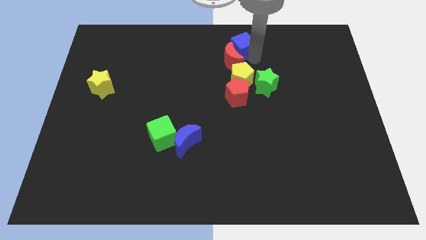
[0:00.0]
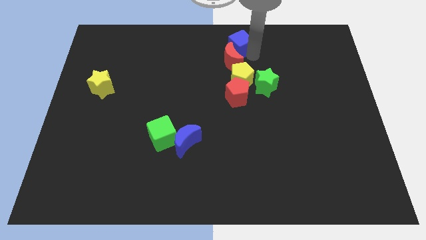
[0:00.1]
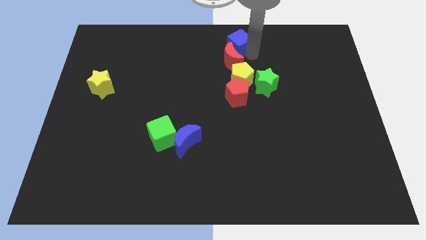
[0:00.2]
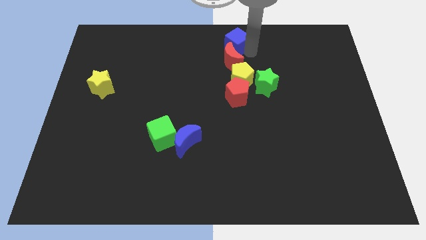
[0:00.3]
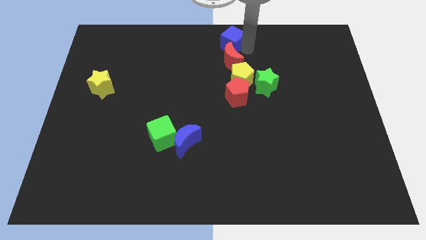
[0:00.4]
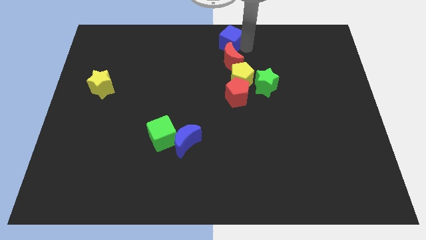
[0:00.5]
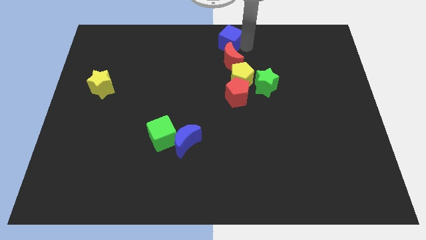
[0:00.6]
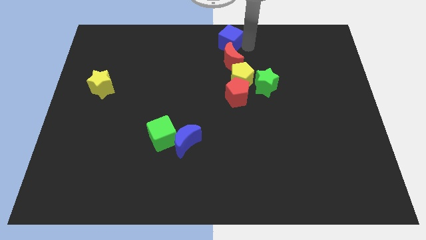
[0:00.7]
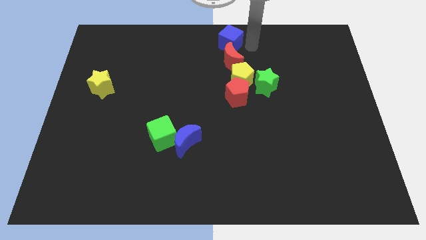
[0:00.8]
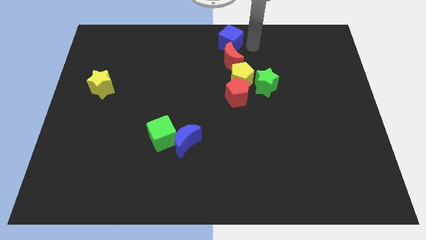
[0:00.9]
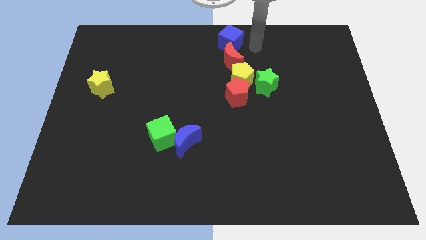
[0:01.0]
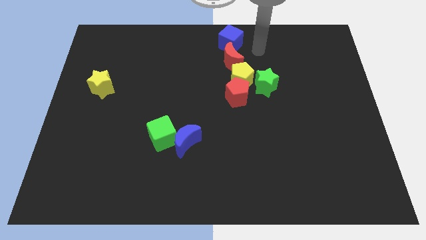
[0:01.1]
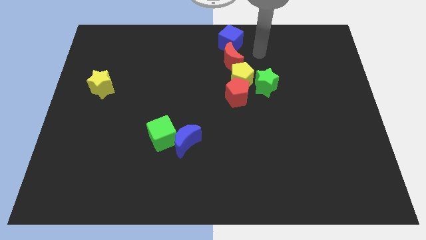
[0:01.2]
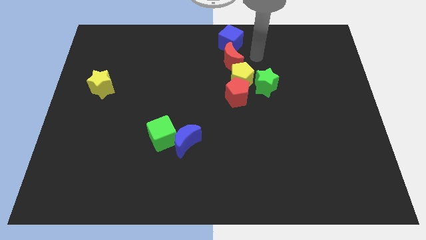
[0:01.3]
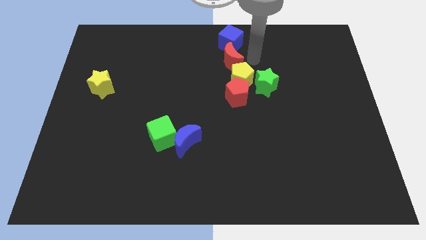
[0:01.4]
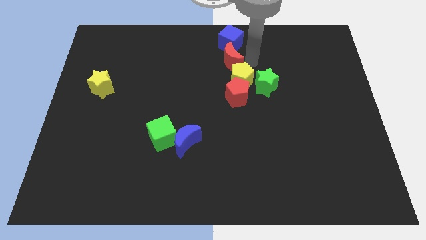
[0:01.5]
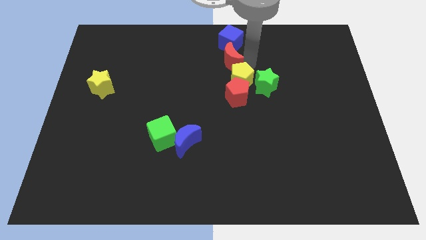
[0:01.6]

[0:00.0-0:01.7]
put the blue cube to the top side of the red moon

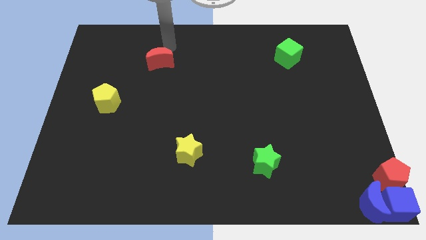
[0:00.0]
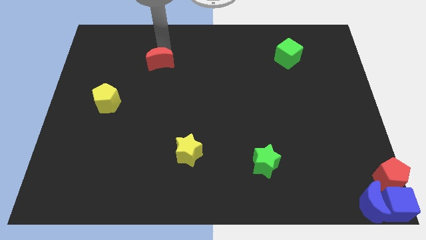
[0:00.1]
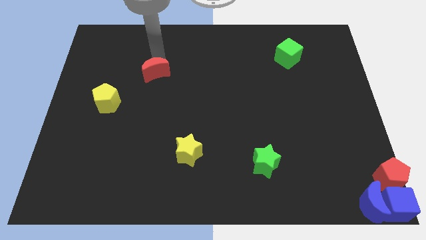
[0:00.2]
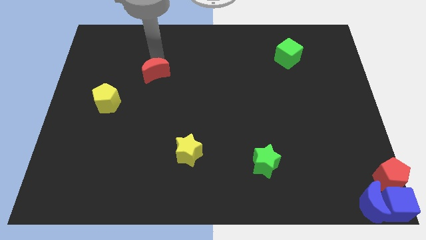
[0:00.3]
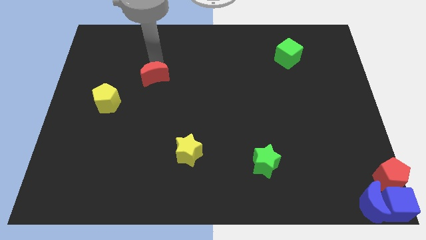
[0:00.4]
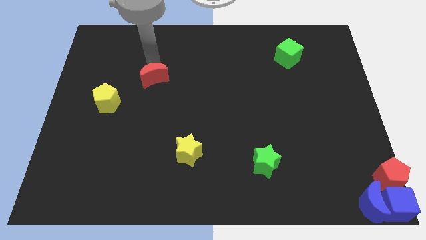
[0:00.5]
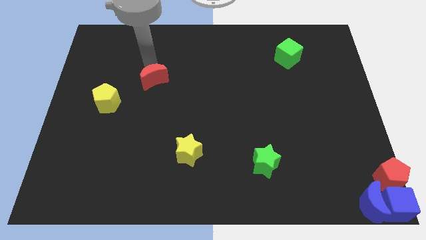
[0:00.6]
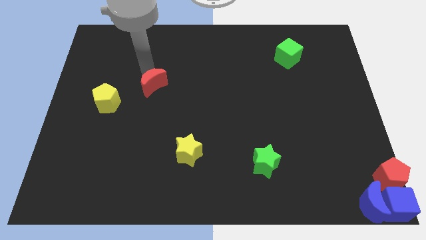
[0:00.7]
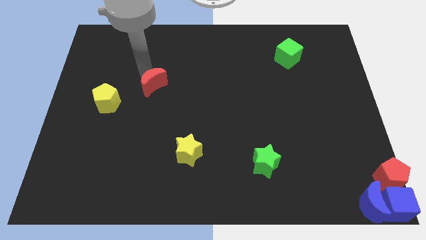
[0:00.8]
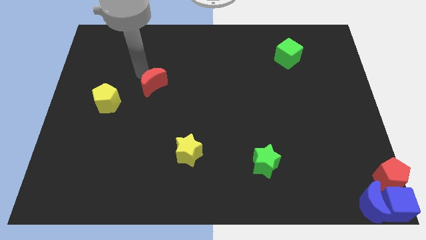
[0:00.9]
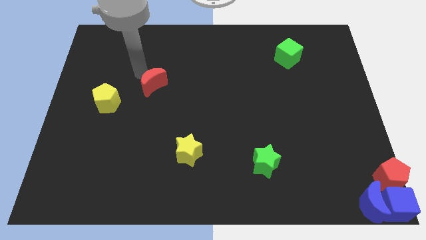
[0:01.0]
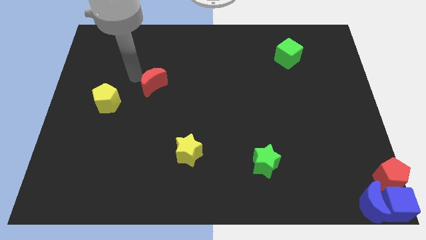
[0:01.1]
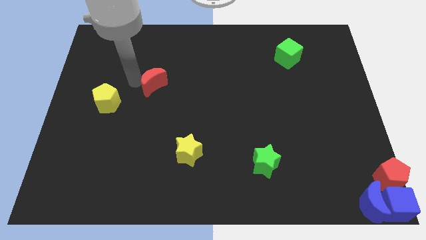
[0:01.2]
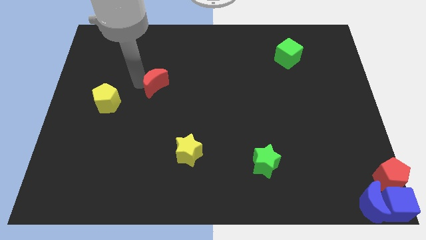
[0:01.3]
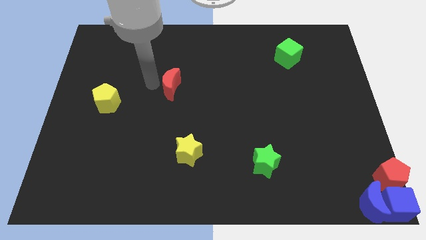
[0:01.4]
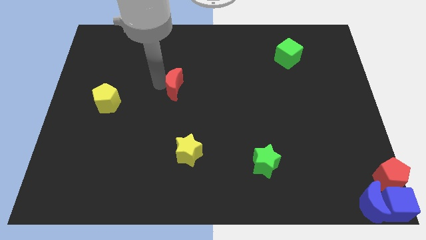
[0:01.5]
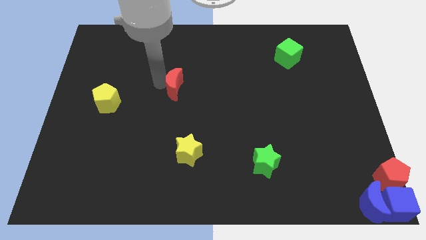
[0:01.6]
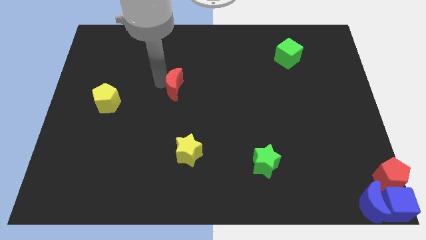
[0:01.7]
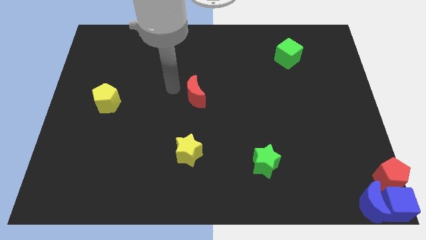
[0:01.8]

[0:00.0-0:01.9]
place the red crescent at center of the board

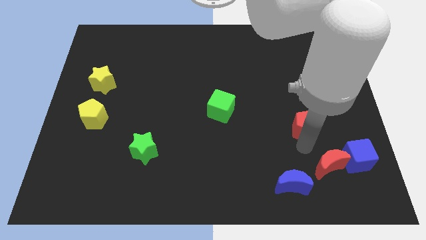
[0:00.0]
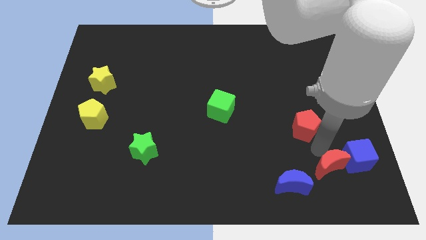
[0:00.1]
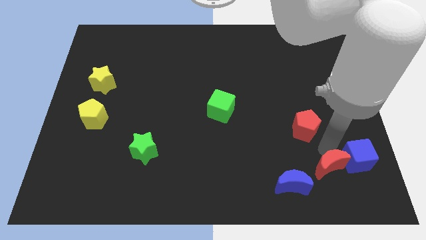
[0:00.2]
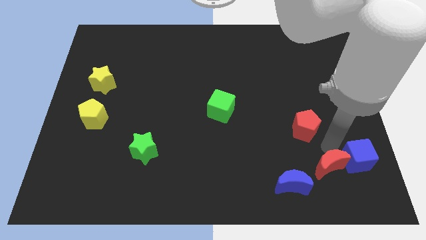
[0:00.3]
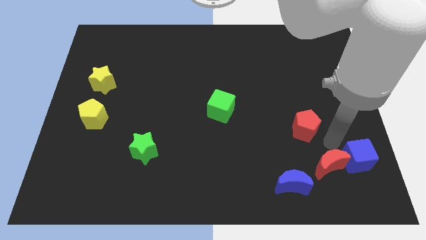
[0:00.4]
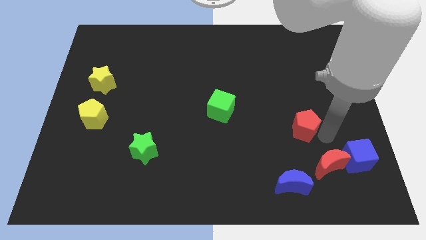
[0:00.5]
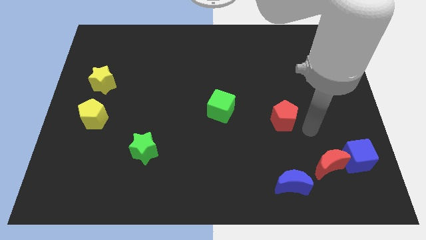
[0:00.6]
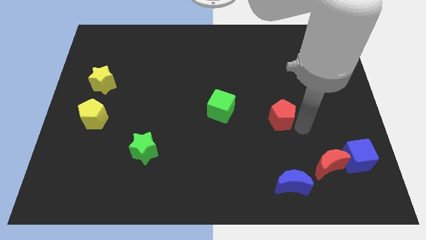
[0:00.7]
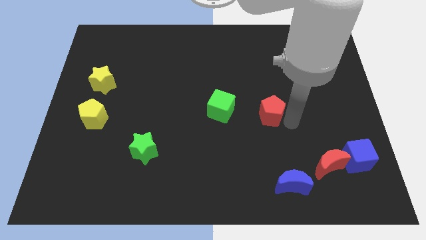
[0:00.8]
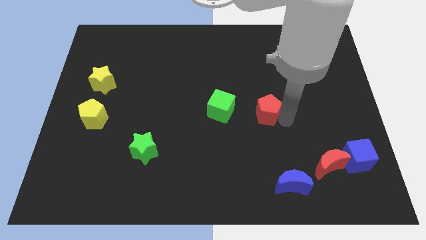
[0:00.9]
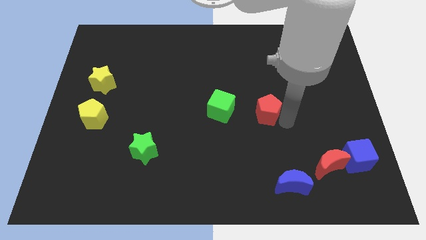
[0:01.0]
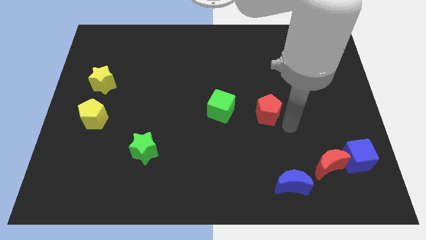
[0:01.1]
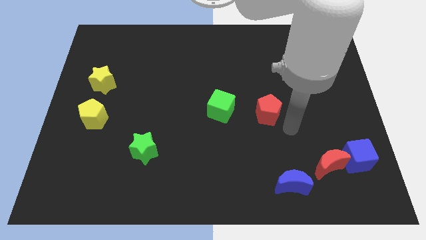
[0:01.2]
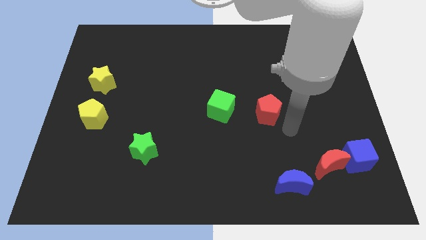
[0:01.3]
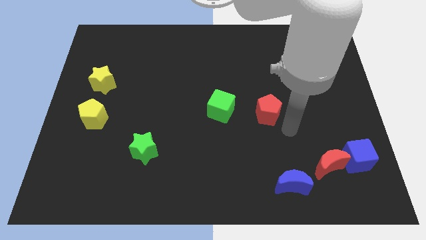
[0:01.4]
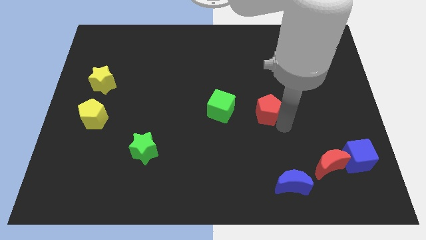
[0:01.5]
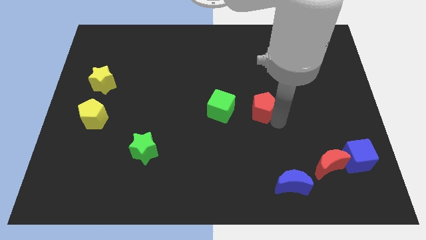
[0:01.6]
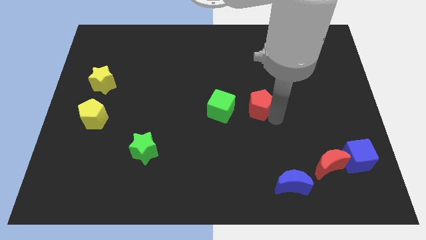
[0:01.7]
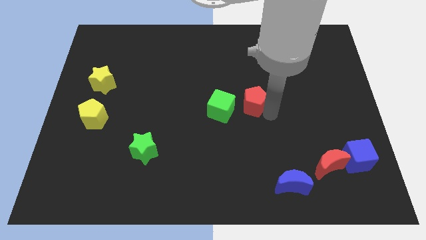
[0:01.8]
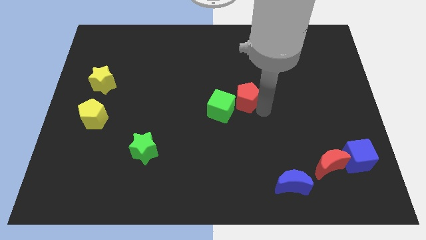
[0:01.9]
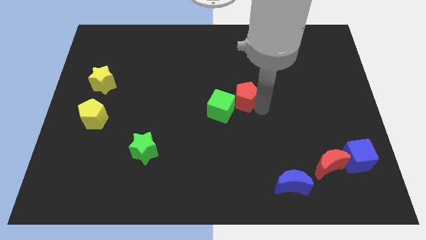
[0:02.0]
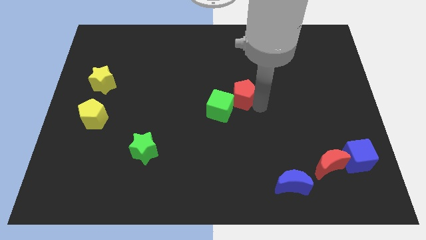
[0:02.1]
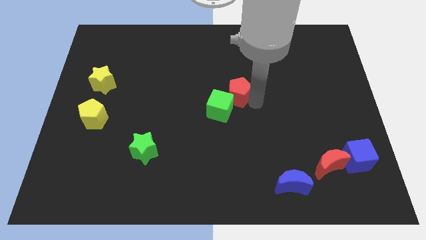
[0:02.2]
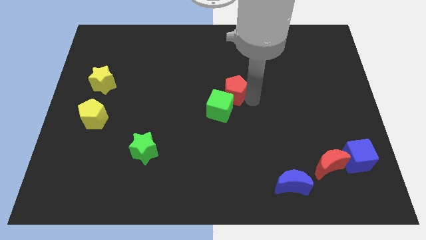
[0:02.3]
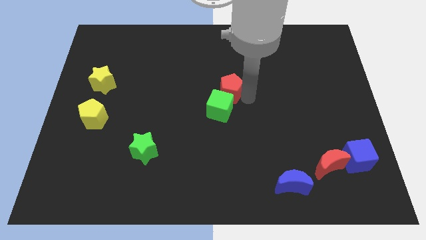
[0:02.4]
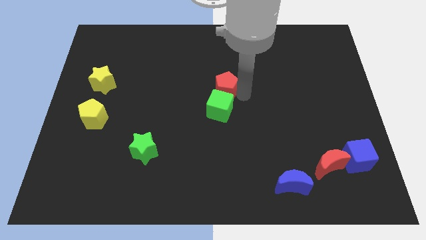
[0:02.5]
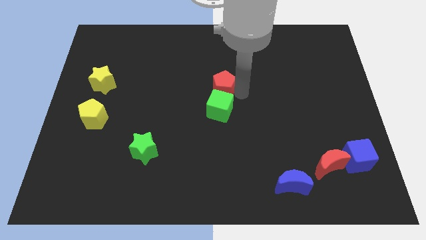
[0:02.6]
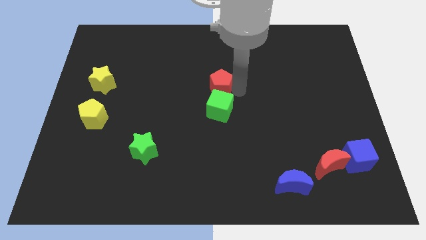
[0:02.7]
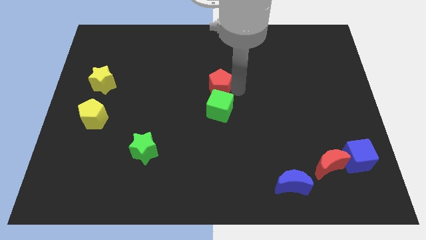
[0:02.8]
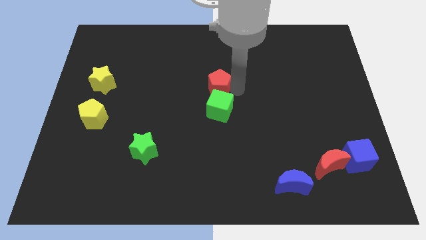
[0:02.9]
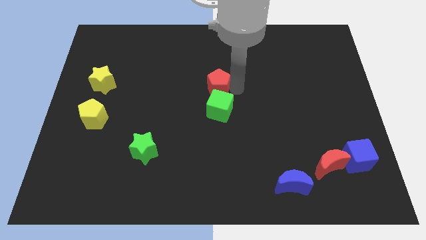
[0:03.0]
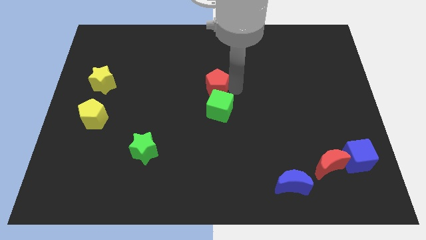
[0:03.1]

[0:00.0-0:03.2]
move the red pentagon to the top of the green cube

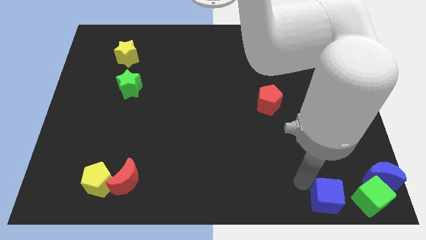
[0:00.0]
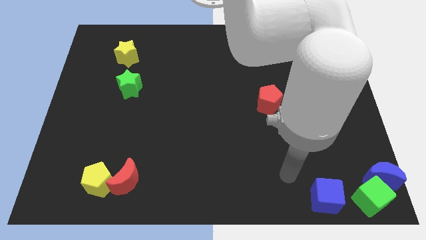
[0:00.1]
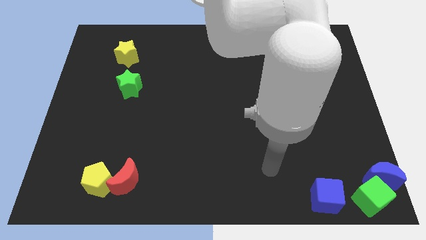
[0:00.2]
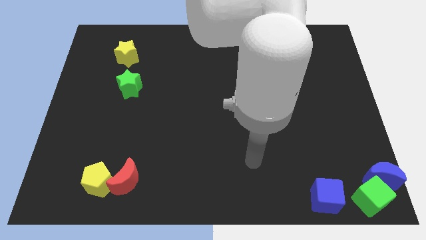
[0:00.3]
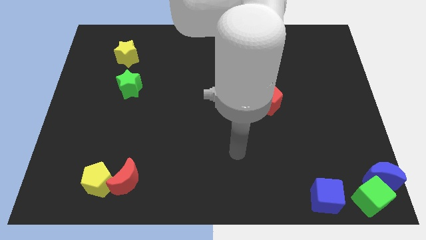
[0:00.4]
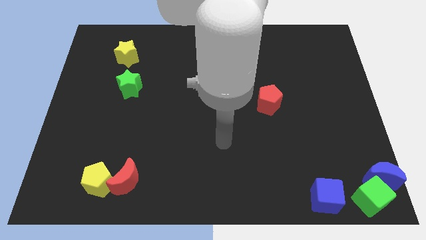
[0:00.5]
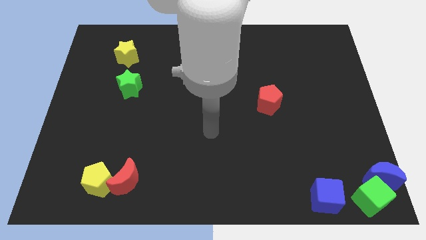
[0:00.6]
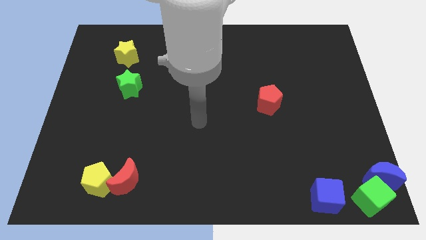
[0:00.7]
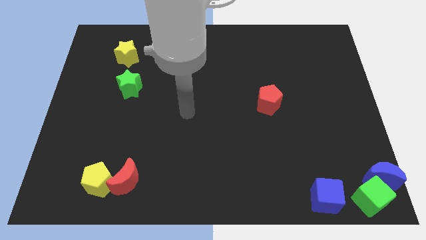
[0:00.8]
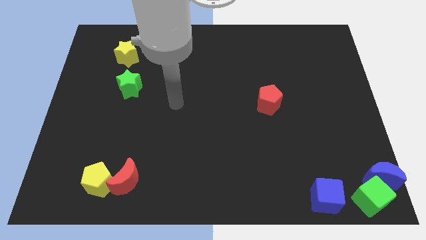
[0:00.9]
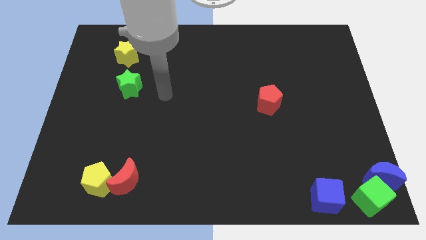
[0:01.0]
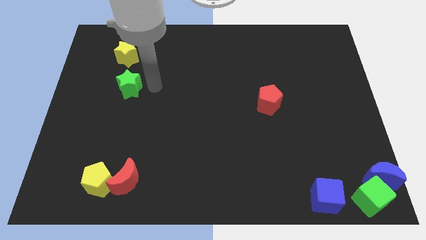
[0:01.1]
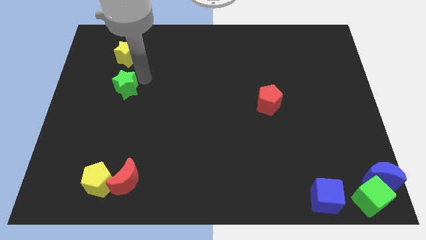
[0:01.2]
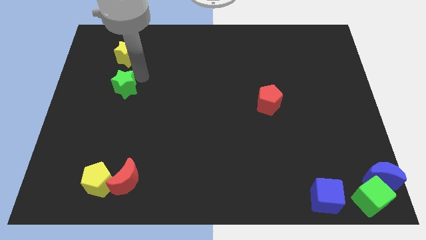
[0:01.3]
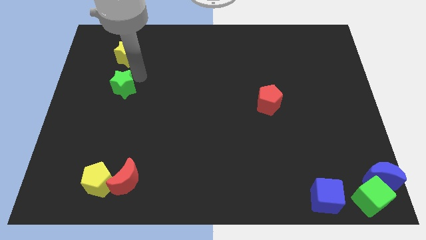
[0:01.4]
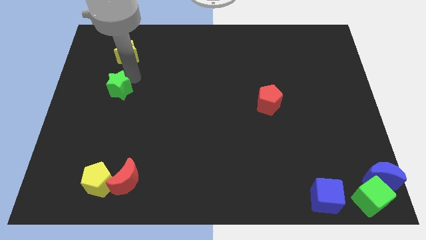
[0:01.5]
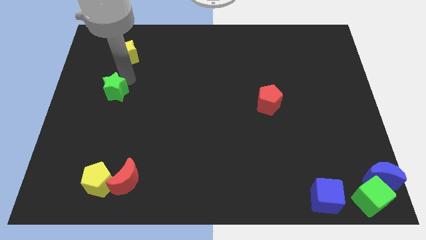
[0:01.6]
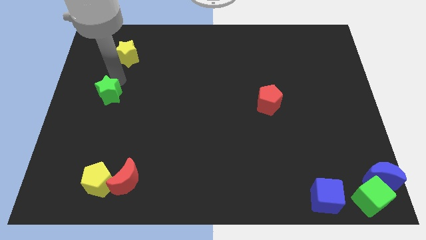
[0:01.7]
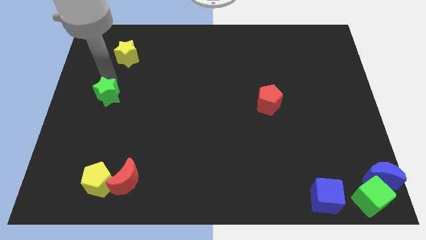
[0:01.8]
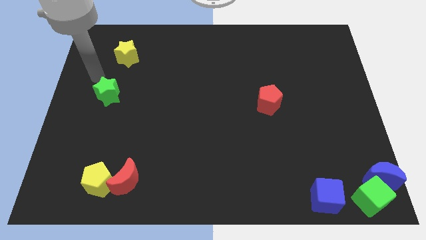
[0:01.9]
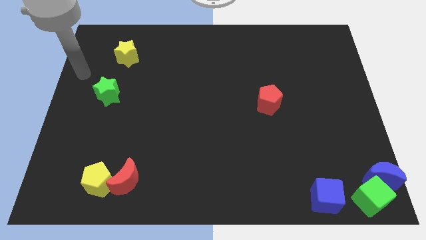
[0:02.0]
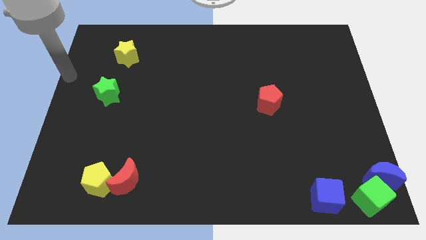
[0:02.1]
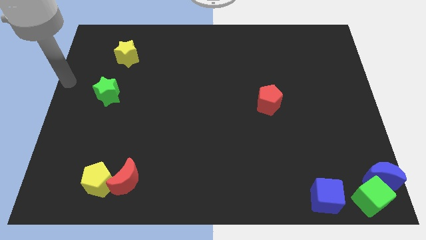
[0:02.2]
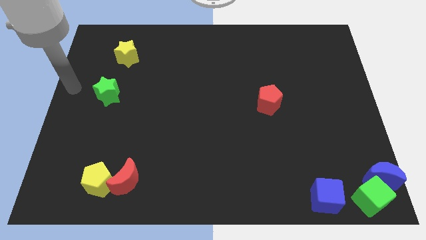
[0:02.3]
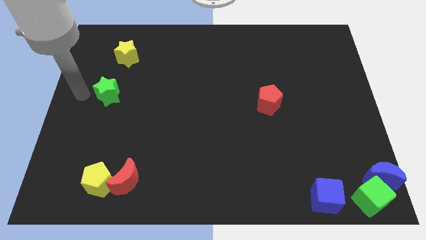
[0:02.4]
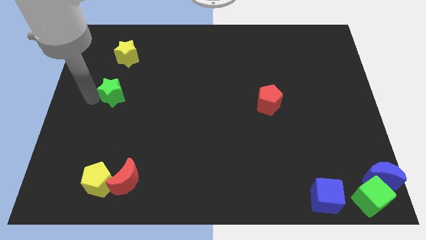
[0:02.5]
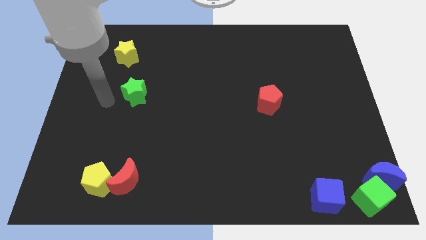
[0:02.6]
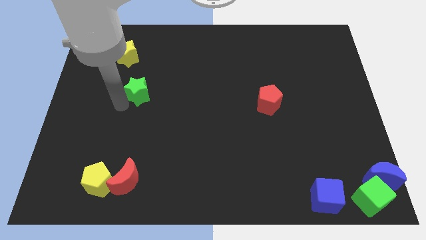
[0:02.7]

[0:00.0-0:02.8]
put the green star vertically at the top side of the red crescent
